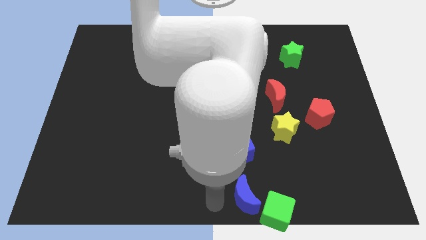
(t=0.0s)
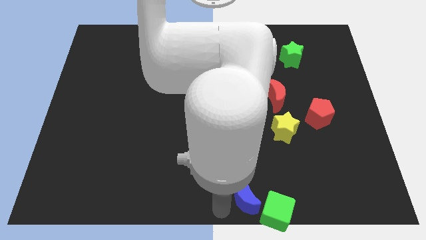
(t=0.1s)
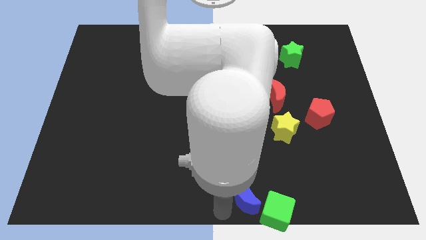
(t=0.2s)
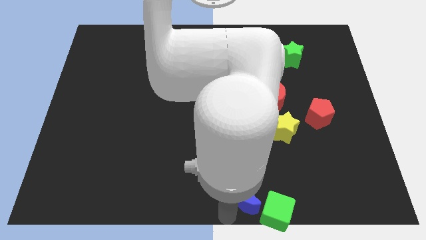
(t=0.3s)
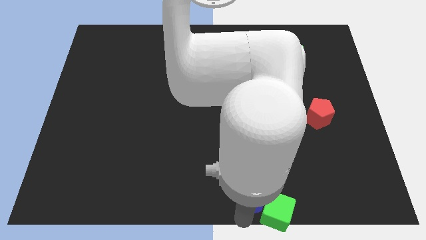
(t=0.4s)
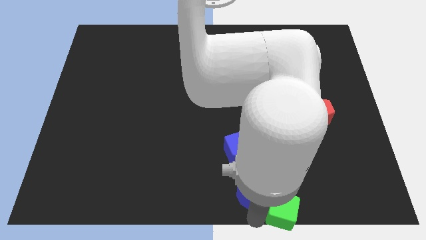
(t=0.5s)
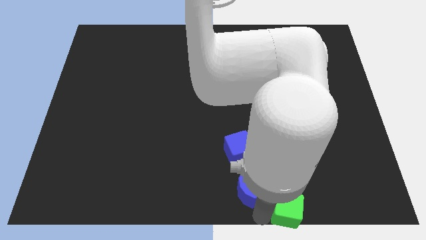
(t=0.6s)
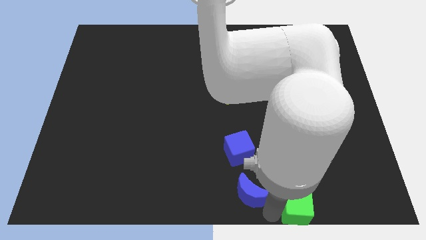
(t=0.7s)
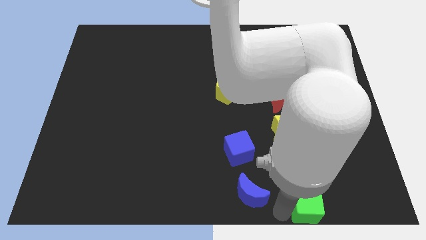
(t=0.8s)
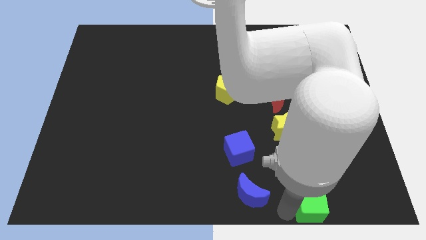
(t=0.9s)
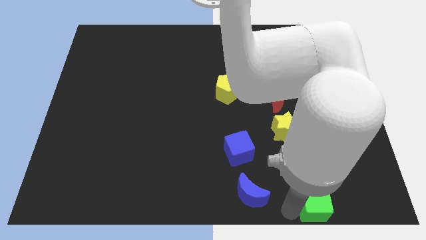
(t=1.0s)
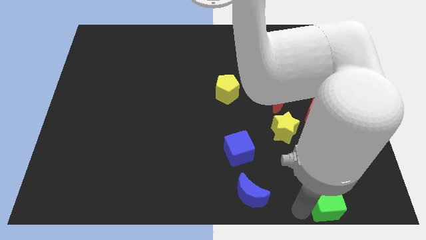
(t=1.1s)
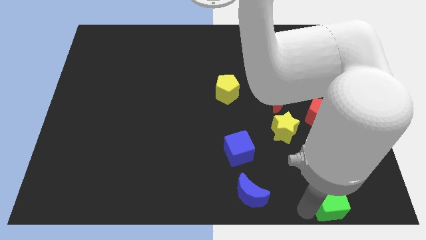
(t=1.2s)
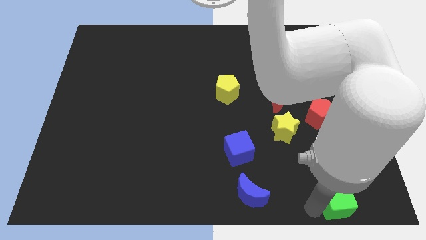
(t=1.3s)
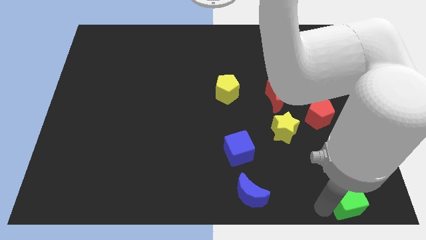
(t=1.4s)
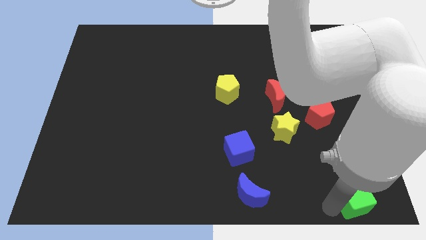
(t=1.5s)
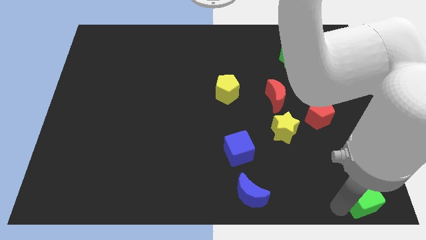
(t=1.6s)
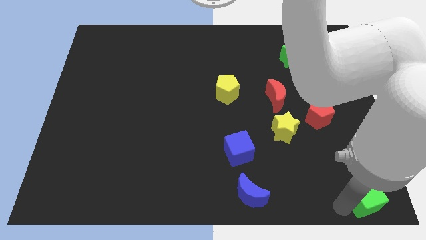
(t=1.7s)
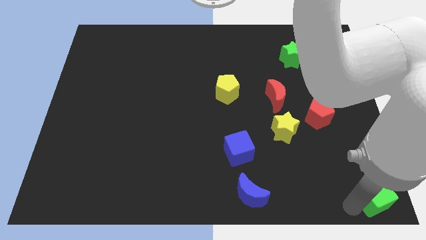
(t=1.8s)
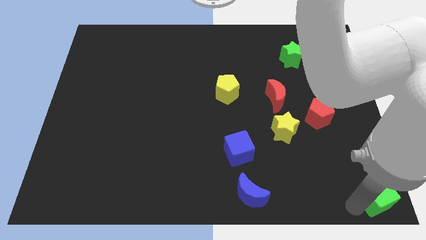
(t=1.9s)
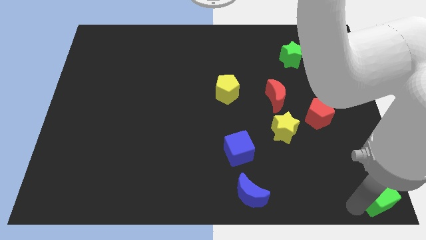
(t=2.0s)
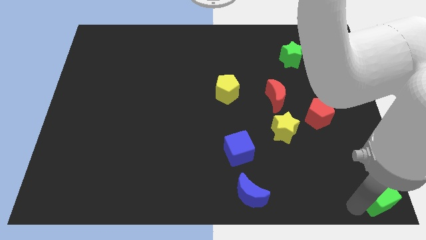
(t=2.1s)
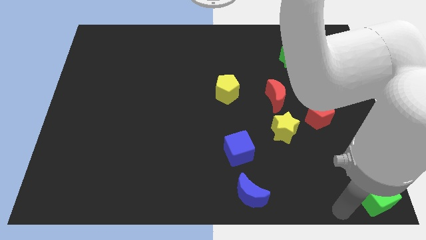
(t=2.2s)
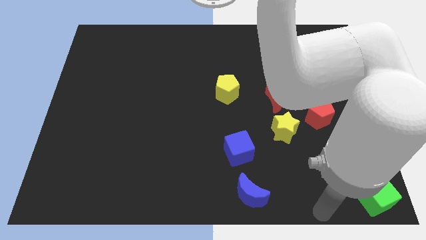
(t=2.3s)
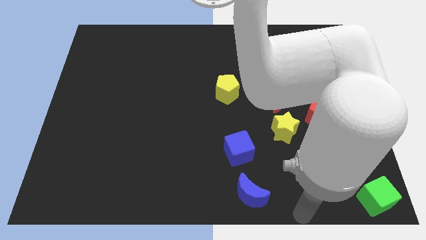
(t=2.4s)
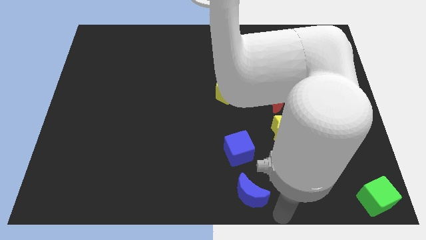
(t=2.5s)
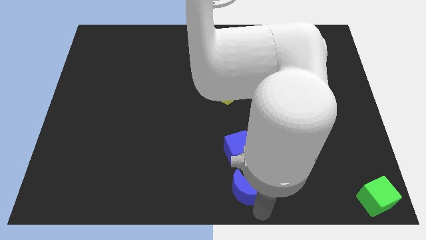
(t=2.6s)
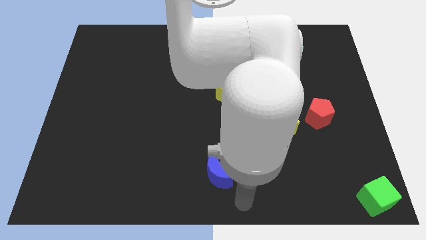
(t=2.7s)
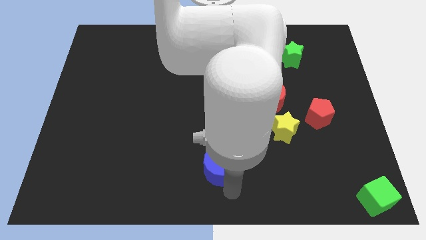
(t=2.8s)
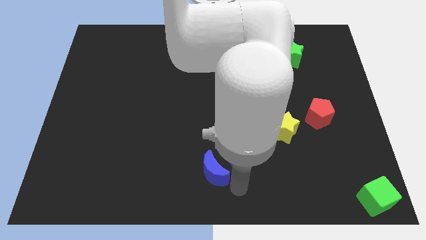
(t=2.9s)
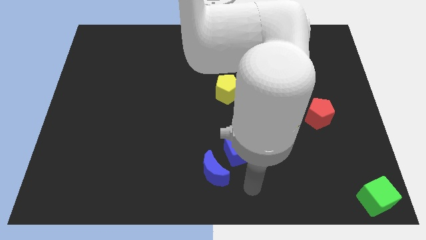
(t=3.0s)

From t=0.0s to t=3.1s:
move the green cube to the bottom right of the board

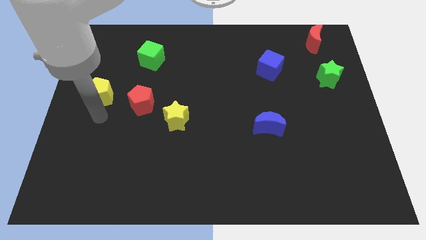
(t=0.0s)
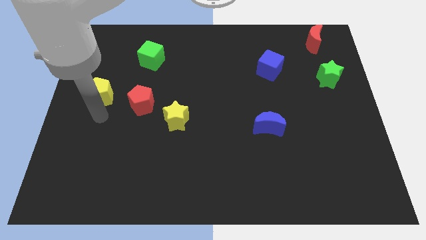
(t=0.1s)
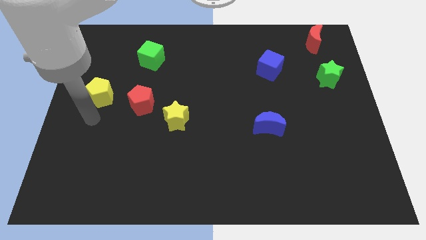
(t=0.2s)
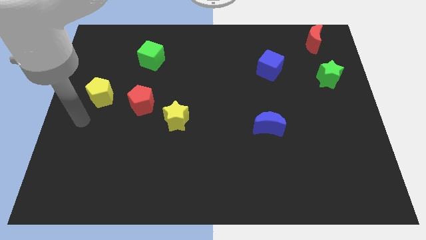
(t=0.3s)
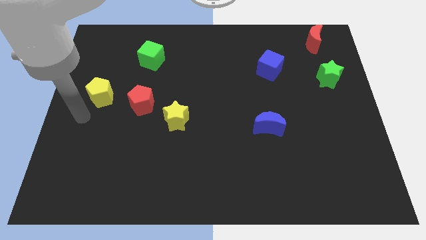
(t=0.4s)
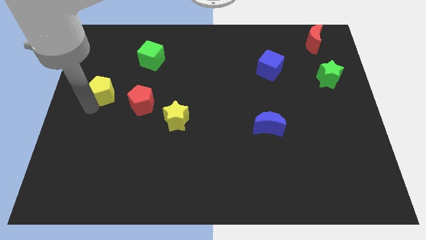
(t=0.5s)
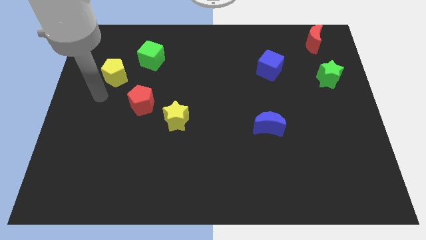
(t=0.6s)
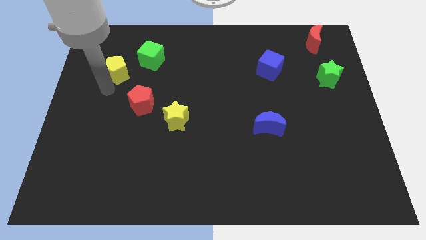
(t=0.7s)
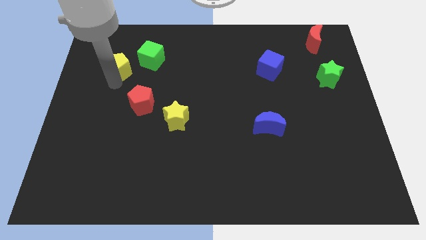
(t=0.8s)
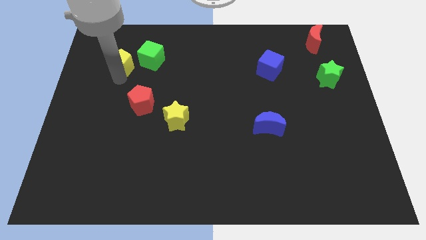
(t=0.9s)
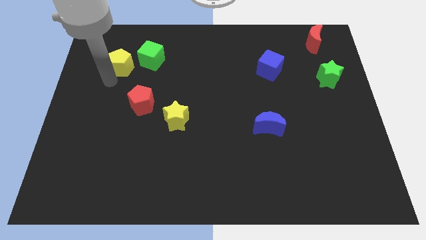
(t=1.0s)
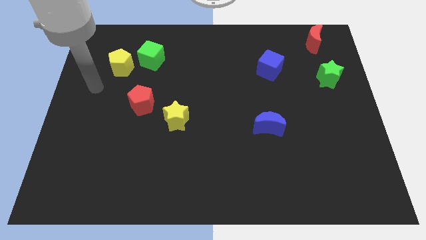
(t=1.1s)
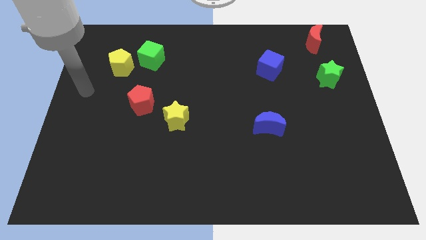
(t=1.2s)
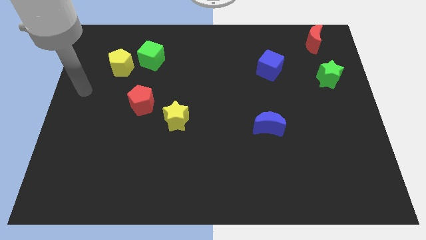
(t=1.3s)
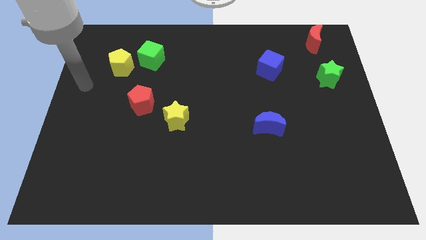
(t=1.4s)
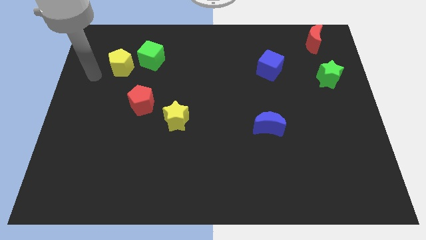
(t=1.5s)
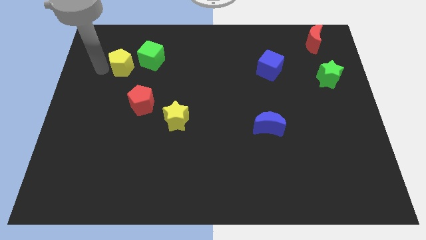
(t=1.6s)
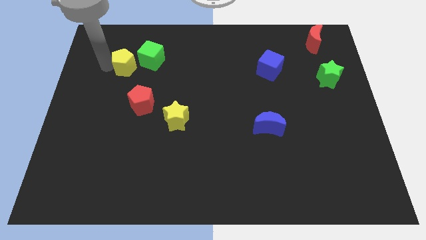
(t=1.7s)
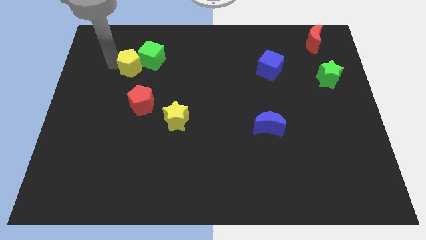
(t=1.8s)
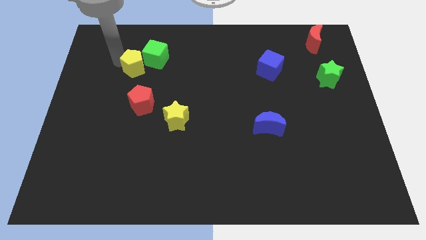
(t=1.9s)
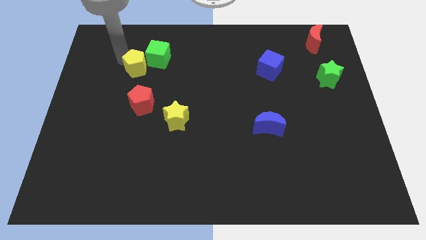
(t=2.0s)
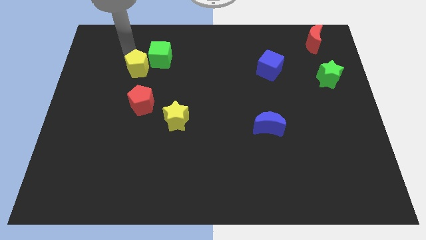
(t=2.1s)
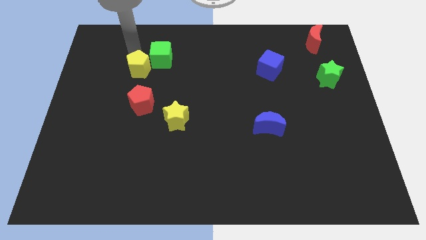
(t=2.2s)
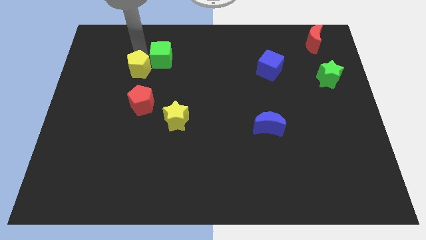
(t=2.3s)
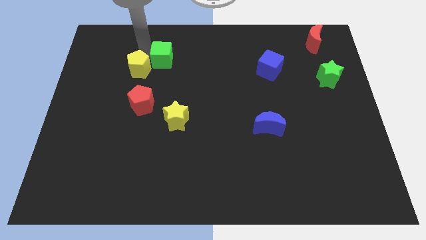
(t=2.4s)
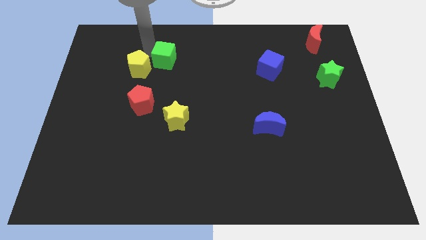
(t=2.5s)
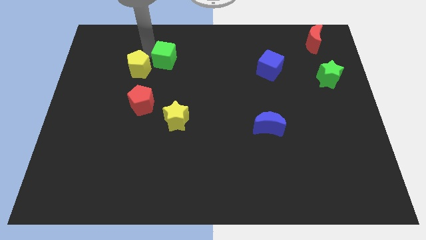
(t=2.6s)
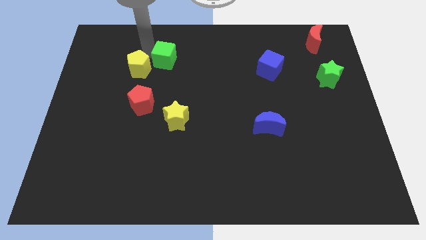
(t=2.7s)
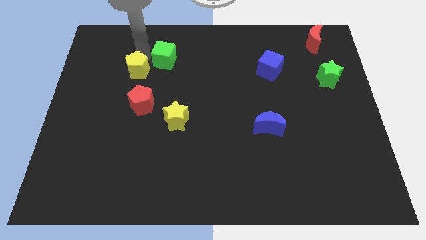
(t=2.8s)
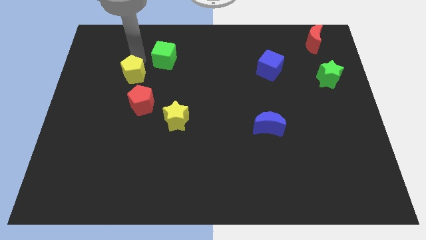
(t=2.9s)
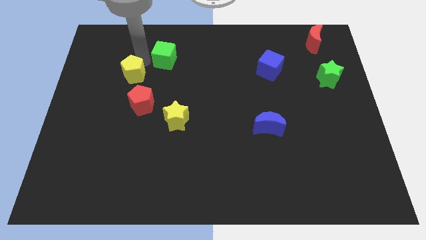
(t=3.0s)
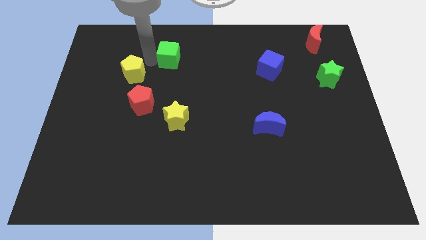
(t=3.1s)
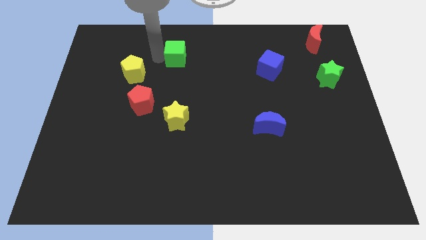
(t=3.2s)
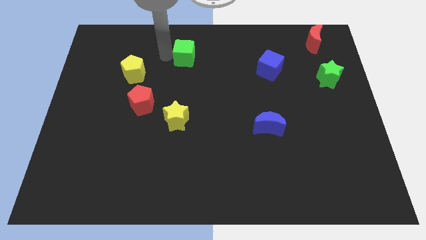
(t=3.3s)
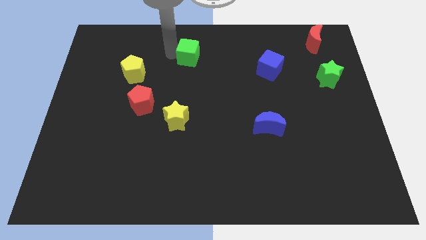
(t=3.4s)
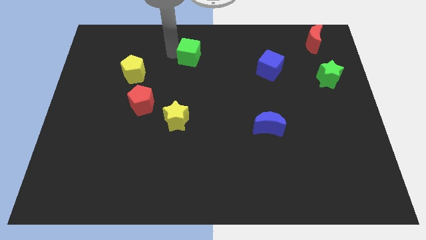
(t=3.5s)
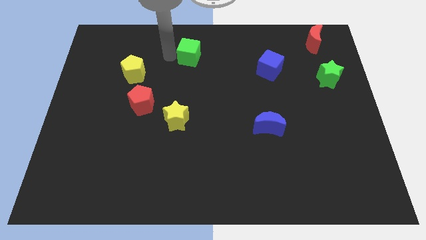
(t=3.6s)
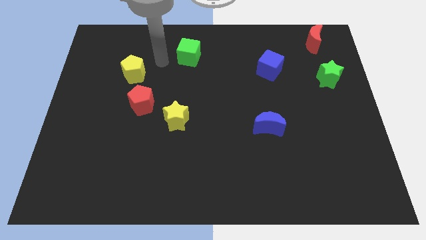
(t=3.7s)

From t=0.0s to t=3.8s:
move the green cube to the top center side

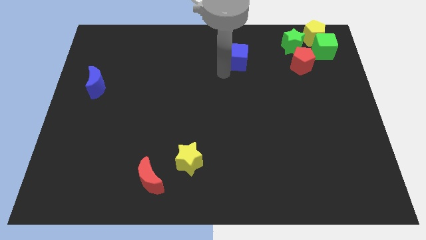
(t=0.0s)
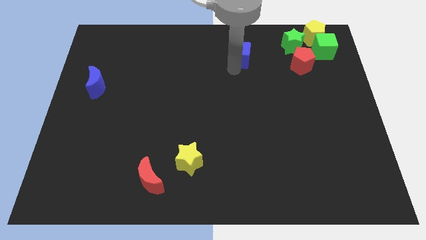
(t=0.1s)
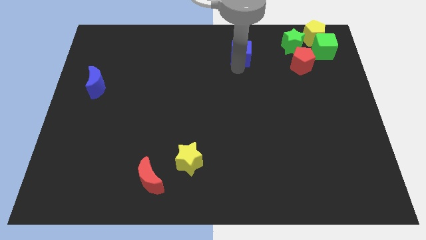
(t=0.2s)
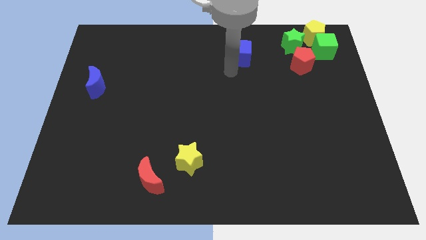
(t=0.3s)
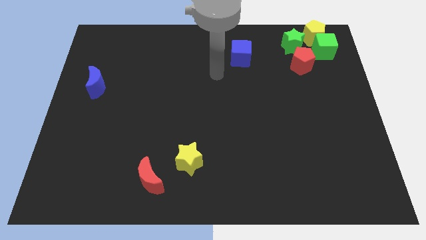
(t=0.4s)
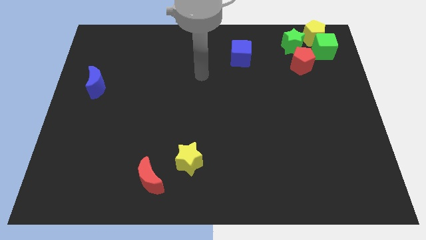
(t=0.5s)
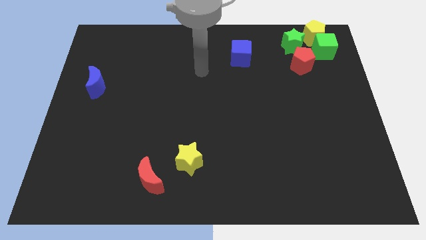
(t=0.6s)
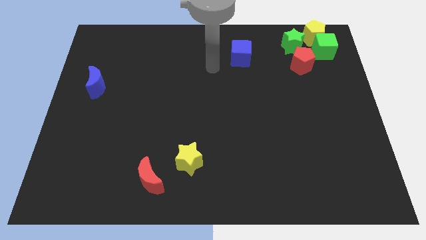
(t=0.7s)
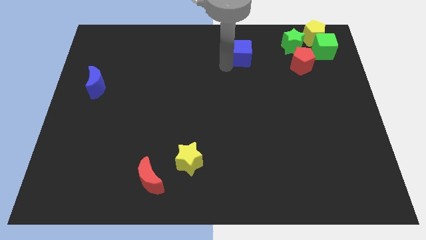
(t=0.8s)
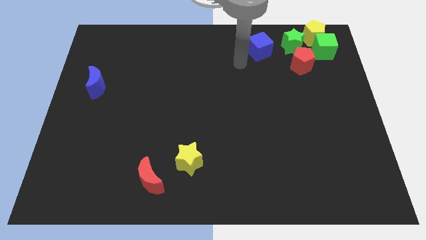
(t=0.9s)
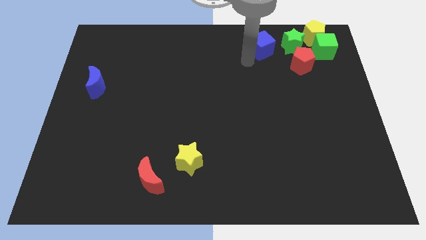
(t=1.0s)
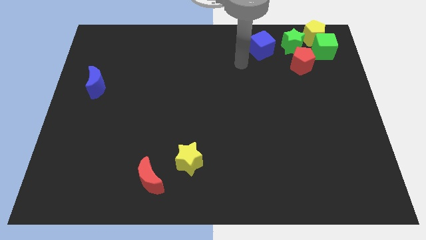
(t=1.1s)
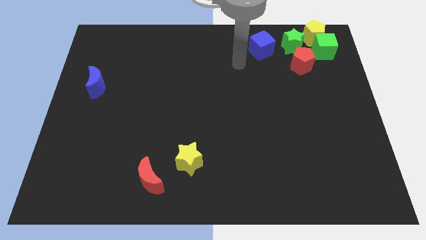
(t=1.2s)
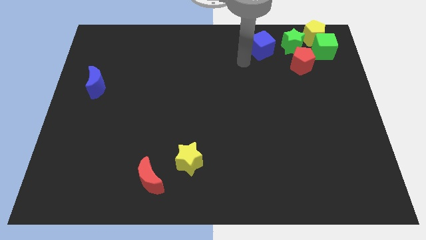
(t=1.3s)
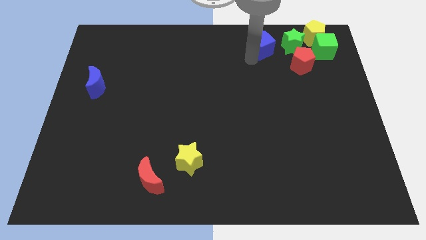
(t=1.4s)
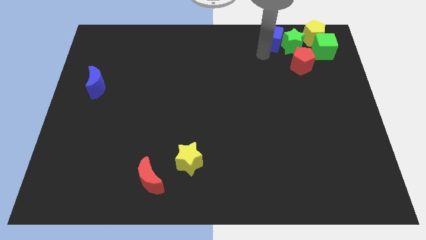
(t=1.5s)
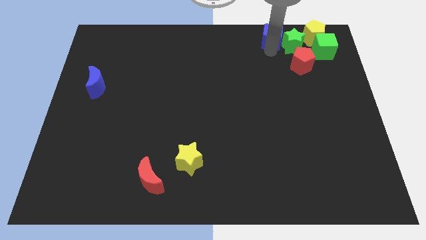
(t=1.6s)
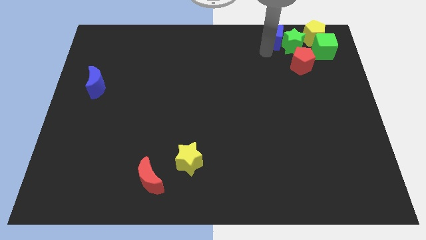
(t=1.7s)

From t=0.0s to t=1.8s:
push the blue cube to the left of green star

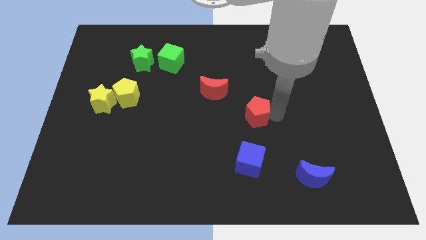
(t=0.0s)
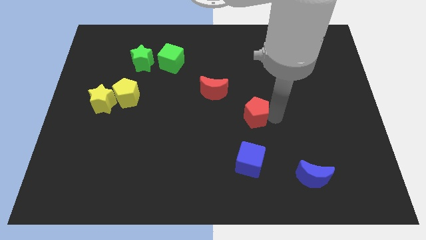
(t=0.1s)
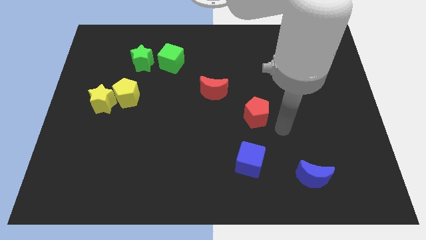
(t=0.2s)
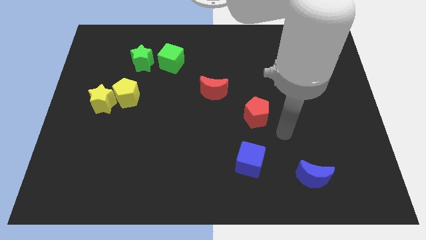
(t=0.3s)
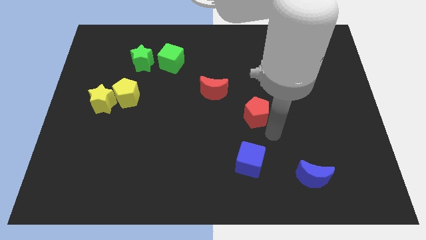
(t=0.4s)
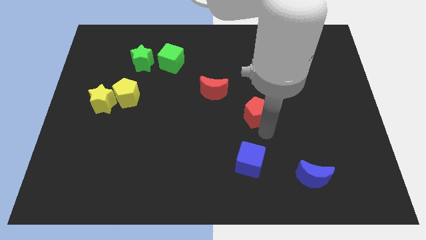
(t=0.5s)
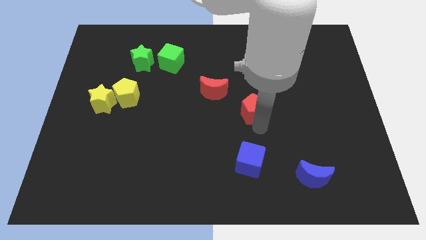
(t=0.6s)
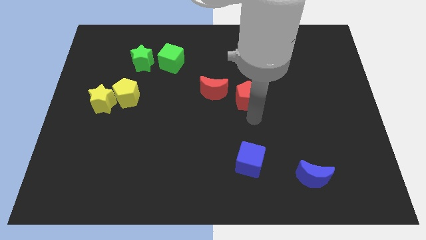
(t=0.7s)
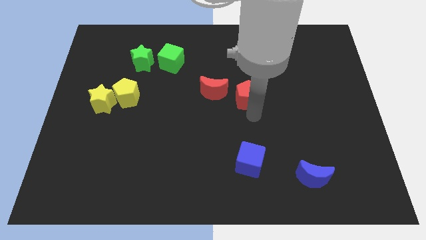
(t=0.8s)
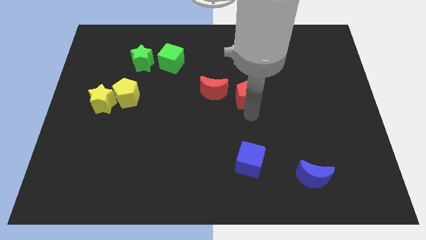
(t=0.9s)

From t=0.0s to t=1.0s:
drag the red pentagon slightly upwards
